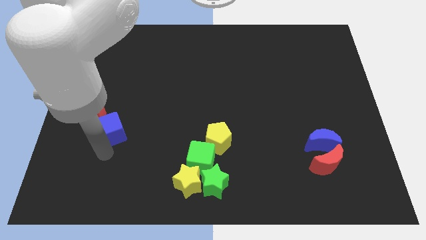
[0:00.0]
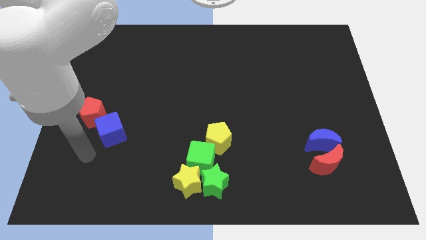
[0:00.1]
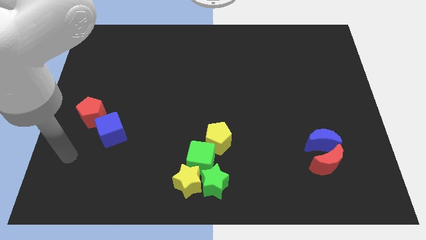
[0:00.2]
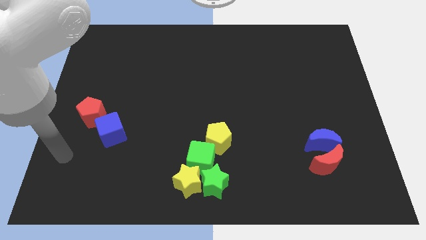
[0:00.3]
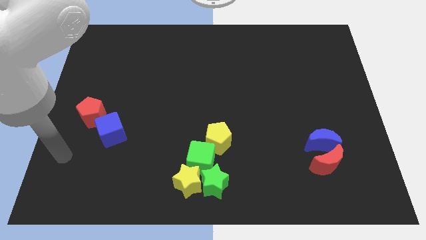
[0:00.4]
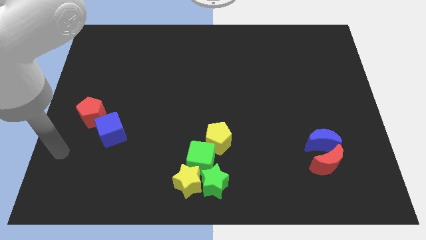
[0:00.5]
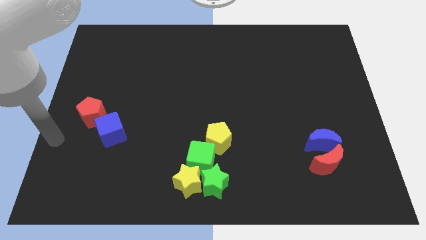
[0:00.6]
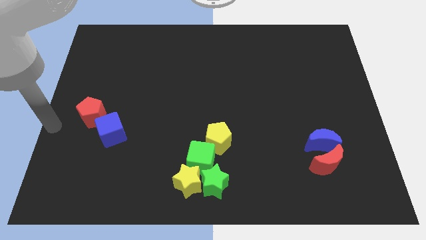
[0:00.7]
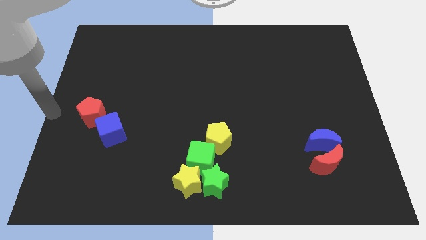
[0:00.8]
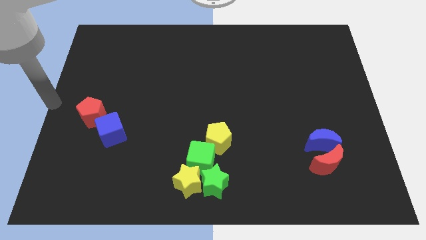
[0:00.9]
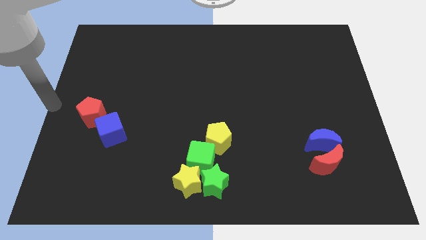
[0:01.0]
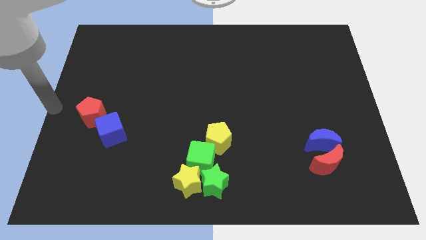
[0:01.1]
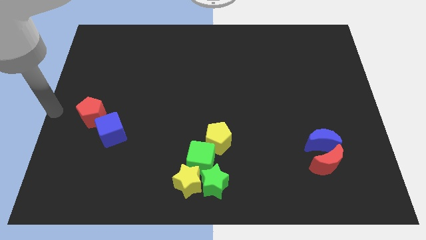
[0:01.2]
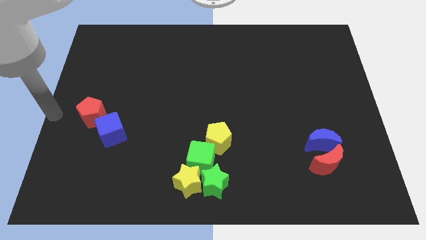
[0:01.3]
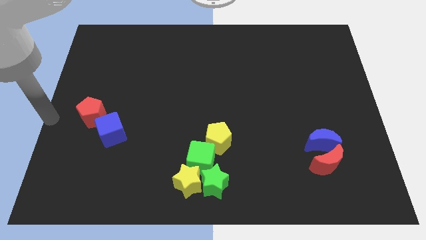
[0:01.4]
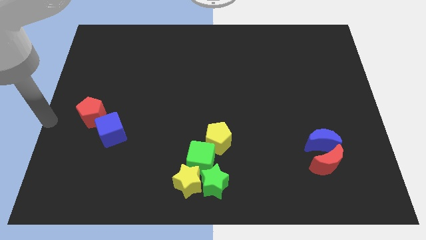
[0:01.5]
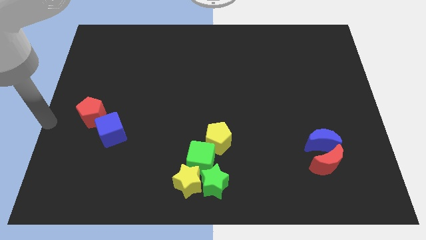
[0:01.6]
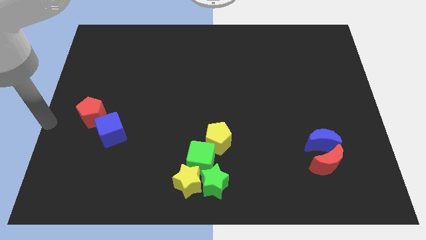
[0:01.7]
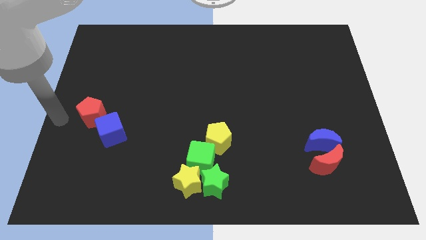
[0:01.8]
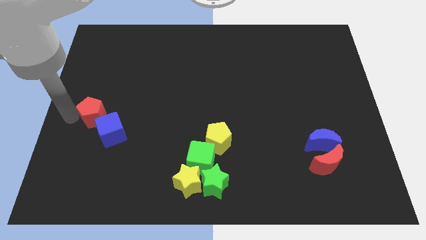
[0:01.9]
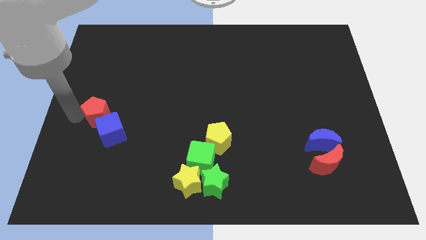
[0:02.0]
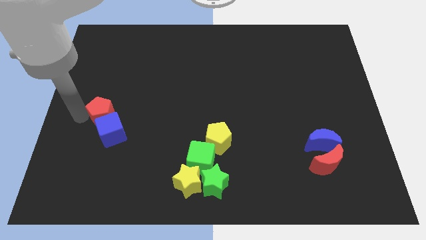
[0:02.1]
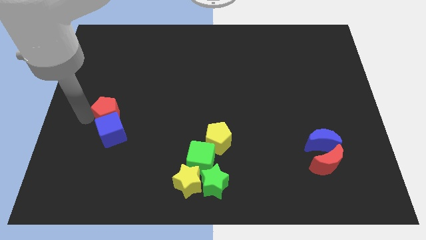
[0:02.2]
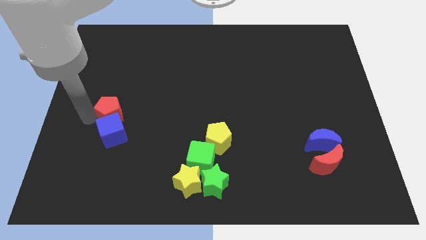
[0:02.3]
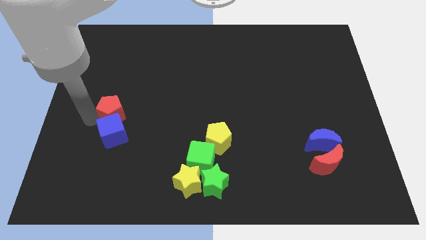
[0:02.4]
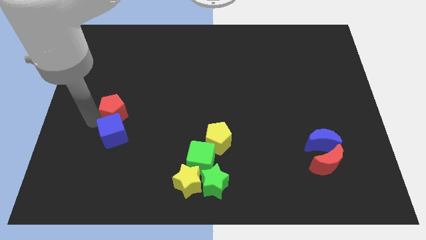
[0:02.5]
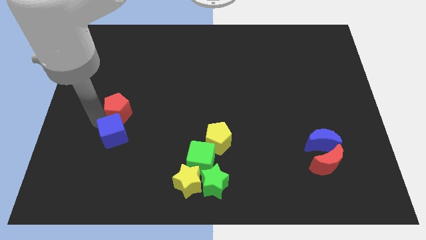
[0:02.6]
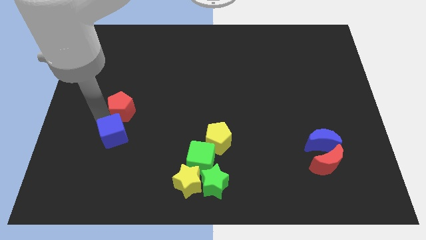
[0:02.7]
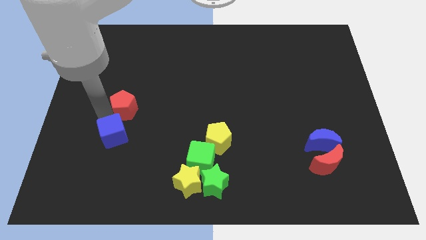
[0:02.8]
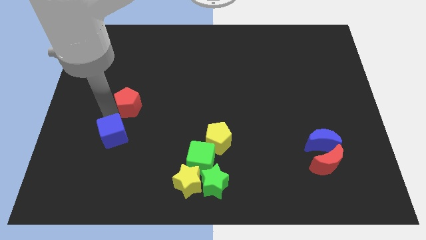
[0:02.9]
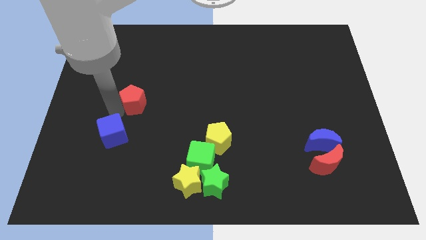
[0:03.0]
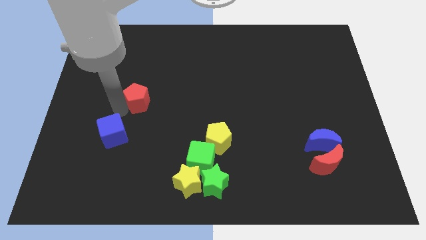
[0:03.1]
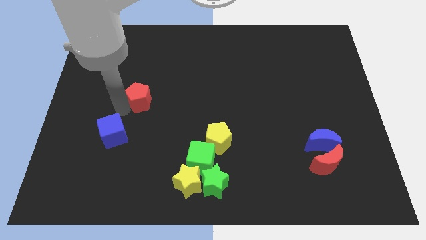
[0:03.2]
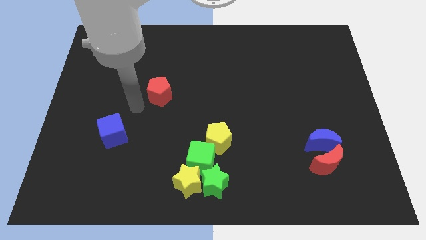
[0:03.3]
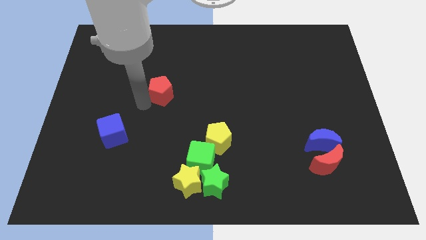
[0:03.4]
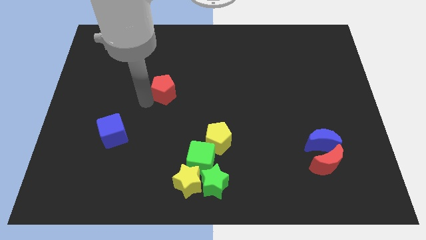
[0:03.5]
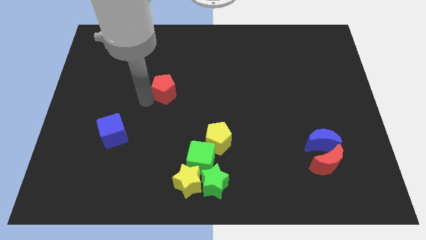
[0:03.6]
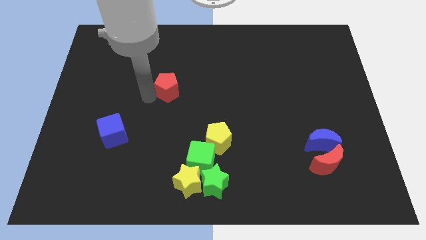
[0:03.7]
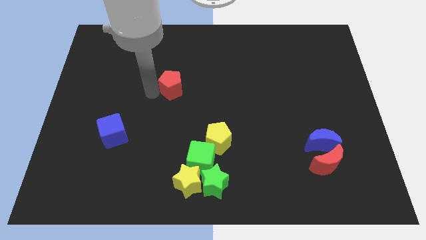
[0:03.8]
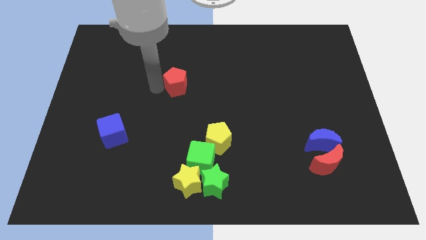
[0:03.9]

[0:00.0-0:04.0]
separate red pentagon from blue cube

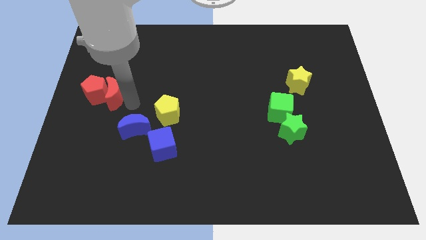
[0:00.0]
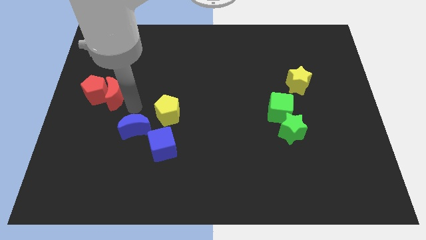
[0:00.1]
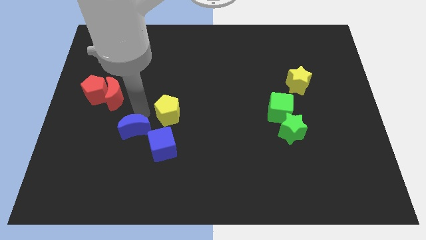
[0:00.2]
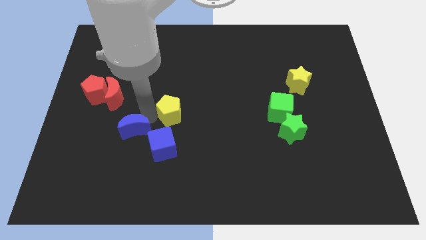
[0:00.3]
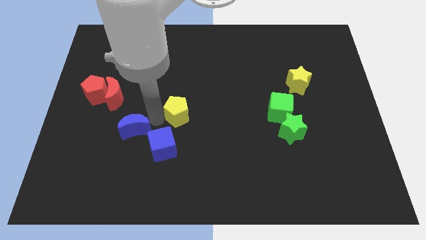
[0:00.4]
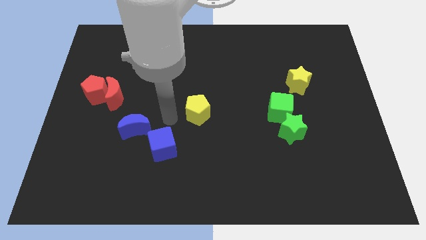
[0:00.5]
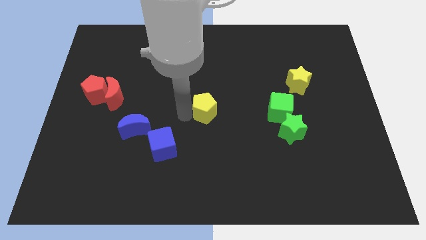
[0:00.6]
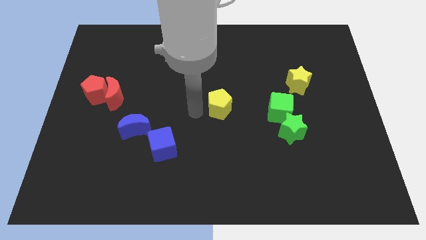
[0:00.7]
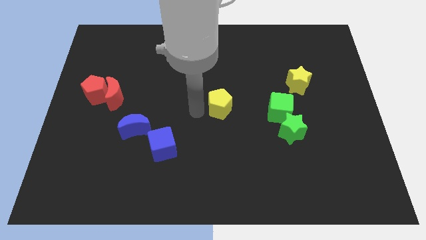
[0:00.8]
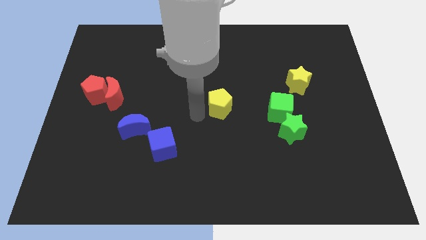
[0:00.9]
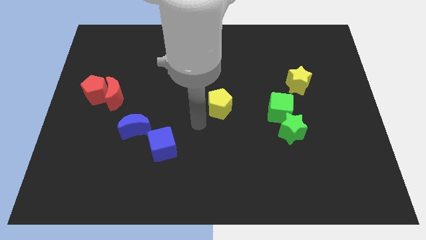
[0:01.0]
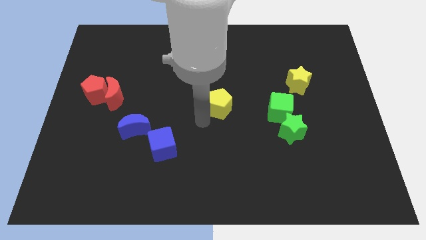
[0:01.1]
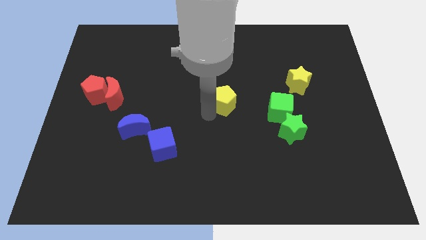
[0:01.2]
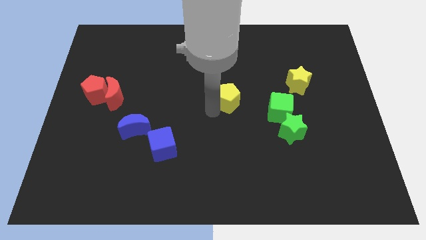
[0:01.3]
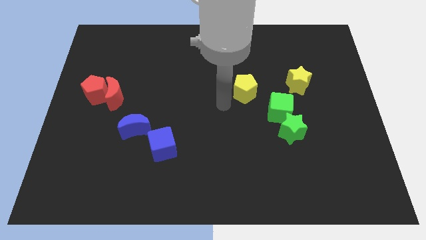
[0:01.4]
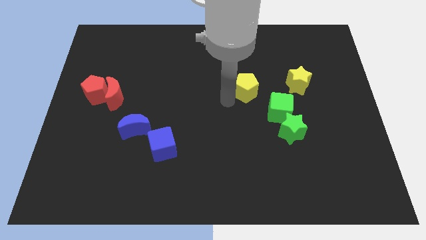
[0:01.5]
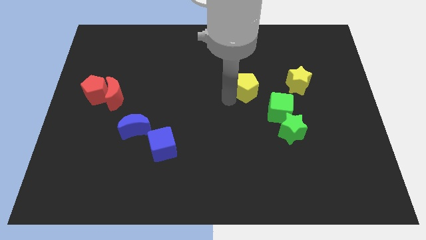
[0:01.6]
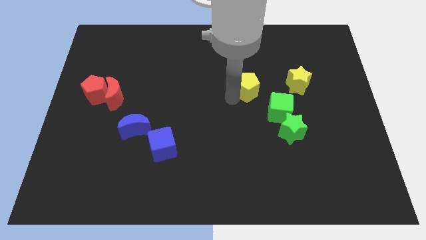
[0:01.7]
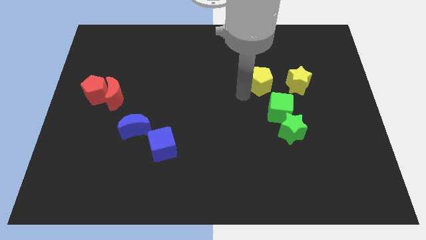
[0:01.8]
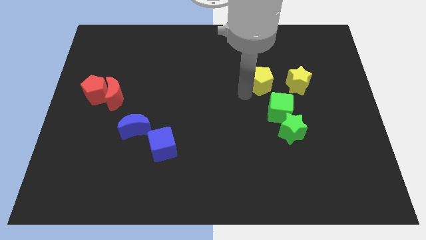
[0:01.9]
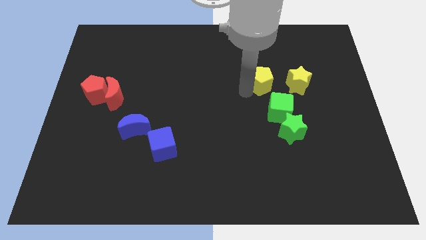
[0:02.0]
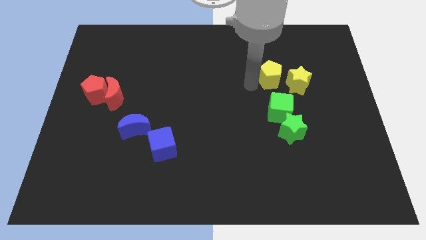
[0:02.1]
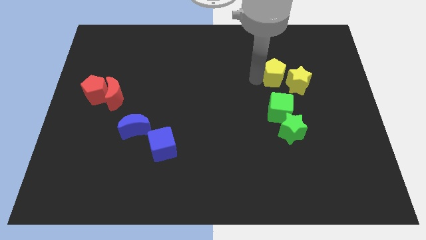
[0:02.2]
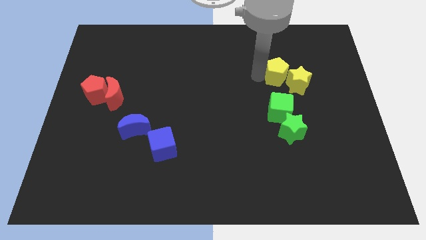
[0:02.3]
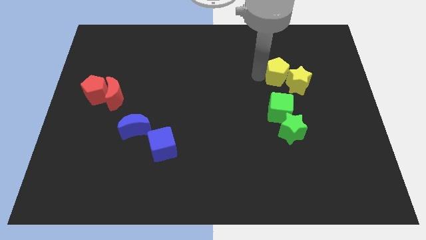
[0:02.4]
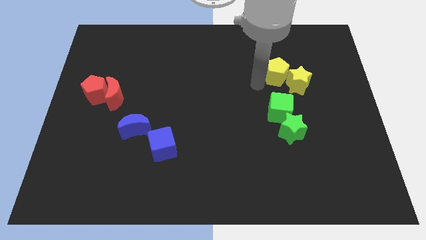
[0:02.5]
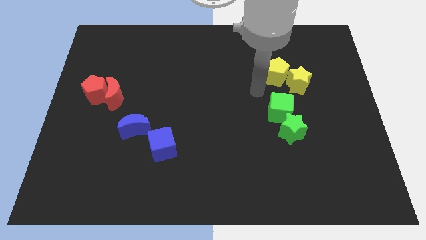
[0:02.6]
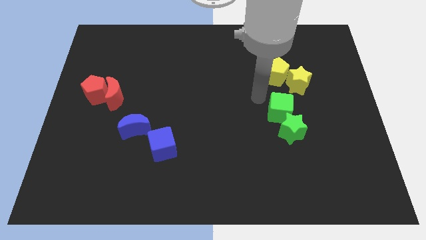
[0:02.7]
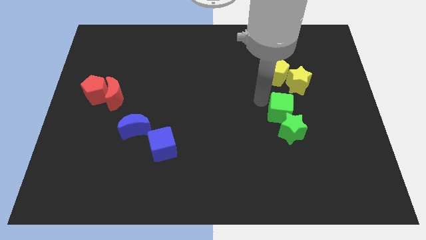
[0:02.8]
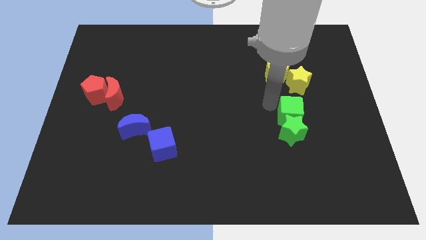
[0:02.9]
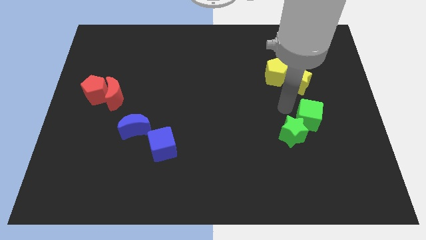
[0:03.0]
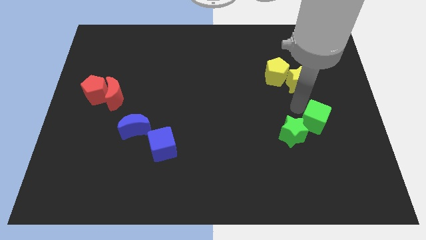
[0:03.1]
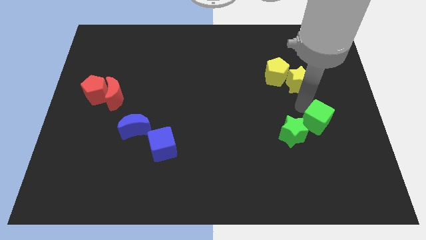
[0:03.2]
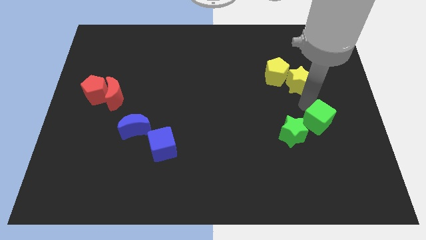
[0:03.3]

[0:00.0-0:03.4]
push the green cube to the right top of the green star

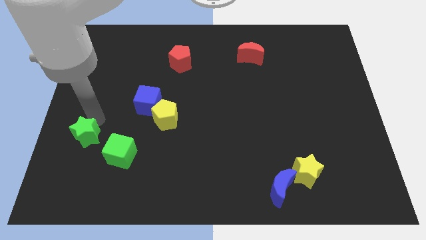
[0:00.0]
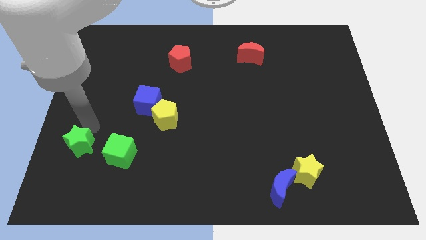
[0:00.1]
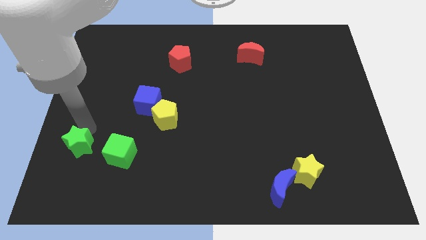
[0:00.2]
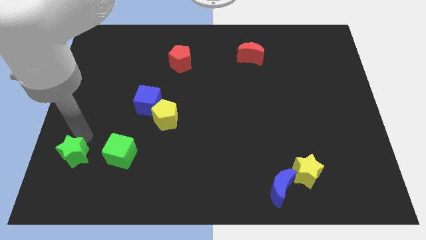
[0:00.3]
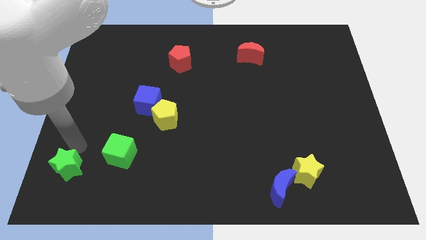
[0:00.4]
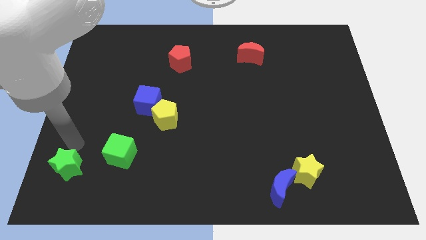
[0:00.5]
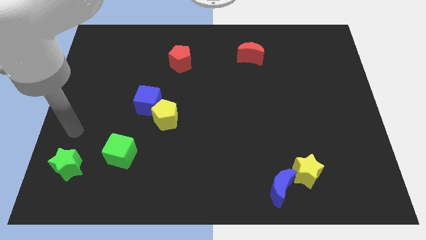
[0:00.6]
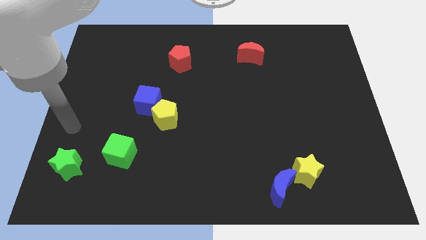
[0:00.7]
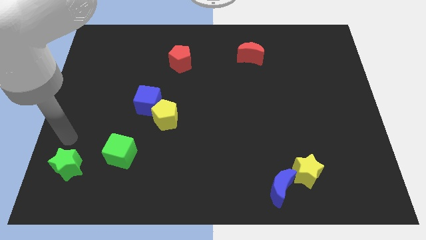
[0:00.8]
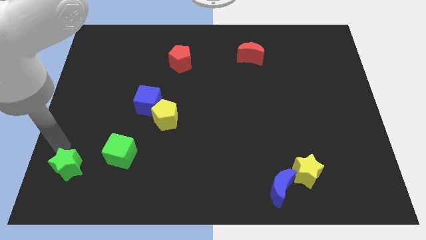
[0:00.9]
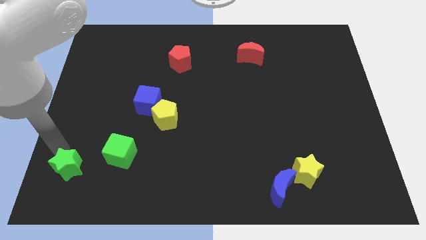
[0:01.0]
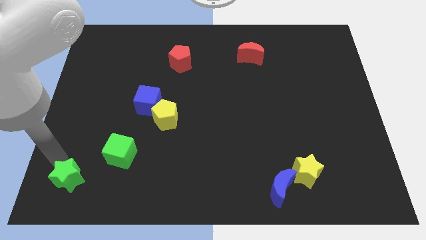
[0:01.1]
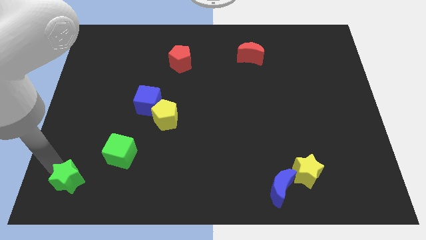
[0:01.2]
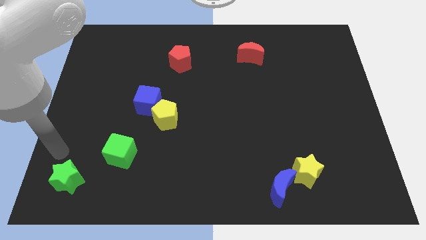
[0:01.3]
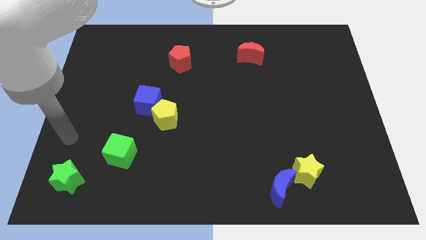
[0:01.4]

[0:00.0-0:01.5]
place the green star horizontally to the left side of the blue crescent
